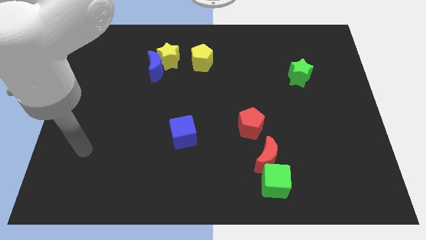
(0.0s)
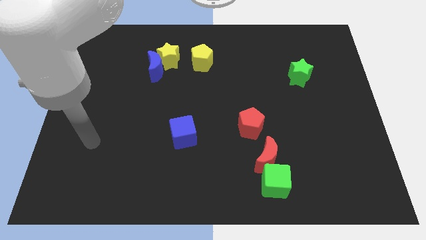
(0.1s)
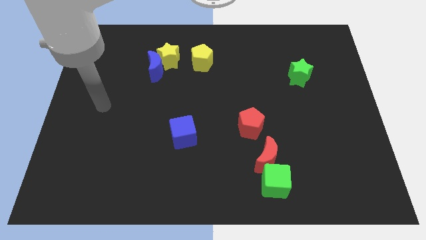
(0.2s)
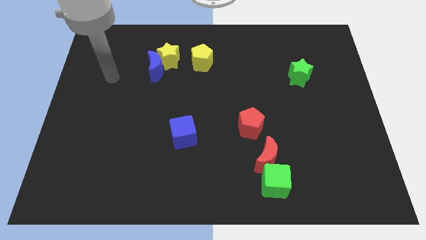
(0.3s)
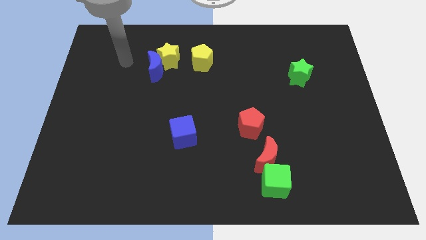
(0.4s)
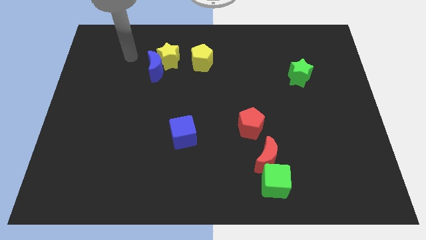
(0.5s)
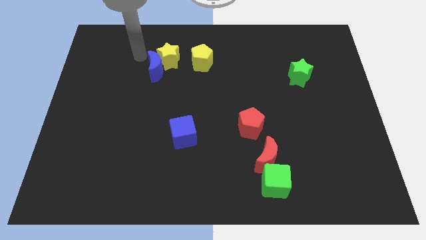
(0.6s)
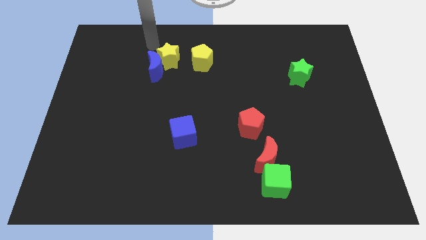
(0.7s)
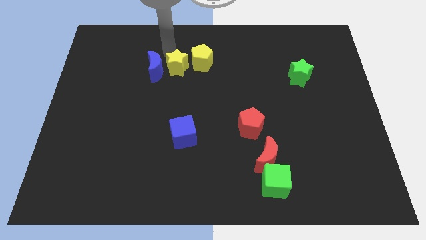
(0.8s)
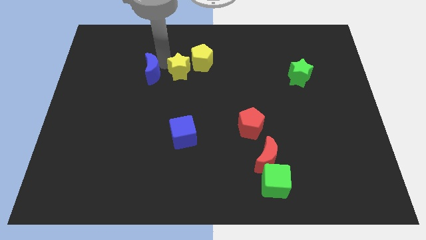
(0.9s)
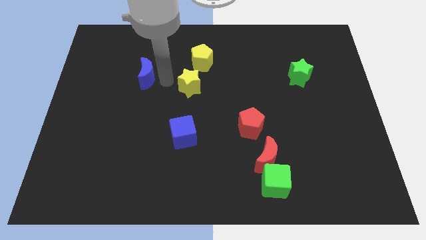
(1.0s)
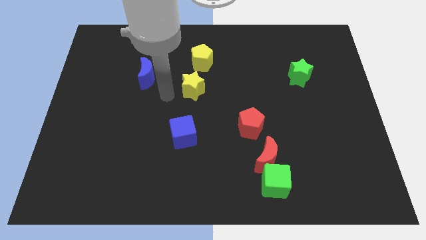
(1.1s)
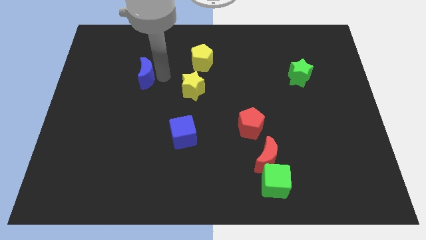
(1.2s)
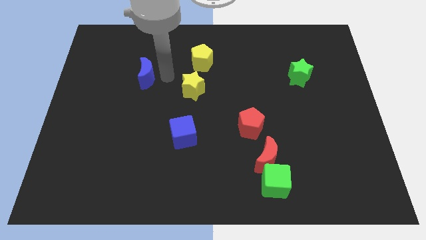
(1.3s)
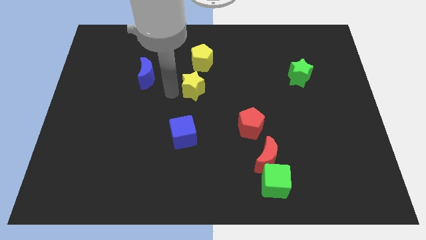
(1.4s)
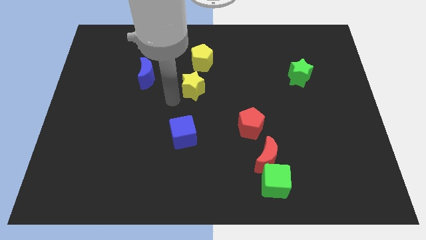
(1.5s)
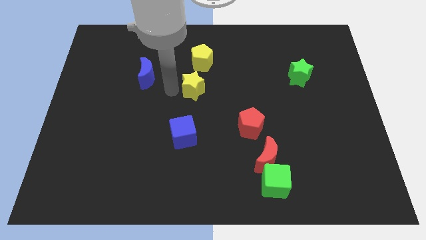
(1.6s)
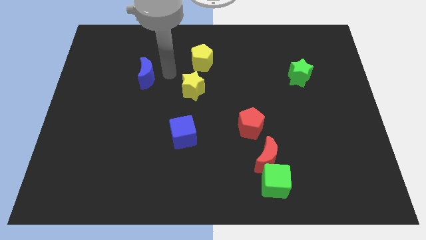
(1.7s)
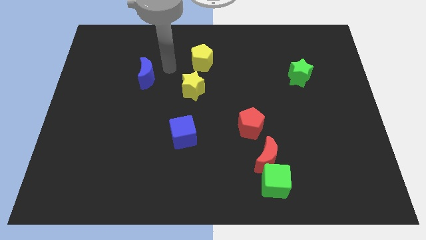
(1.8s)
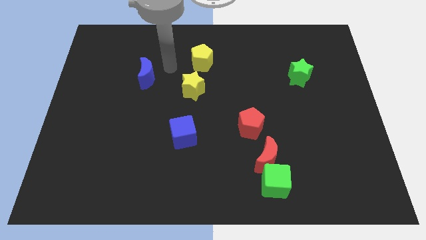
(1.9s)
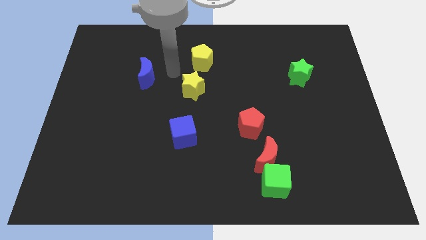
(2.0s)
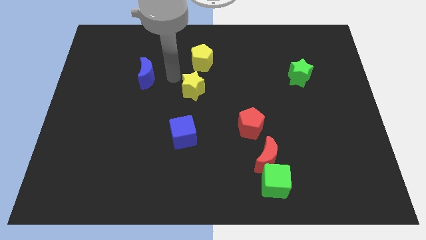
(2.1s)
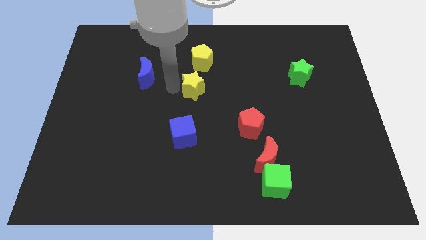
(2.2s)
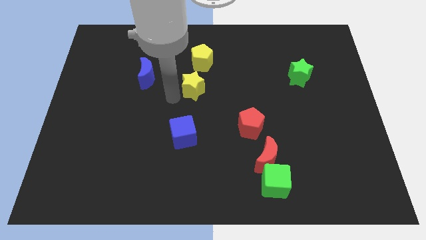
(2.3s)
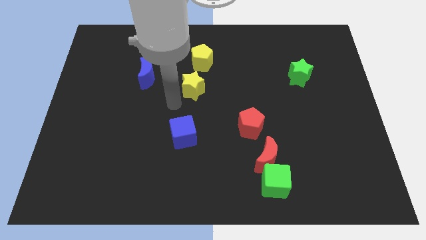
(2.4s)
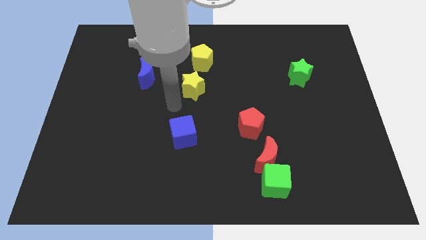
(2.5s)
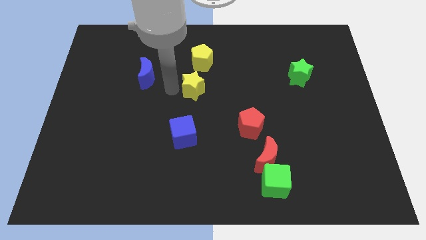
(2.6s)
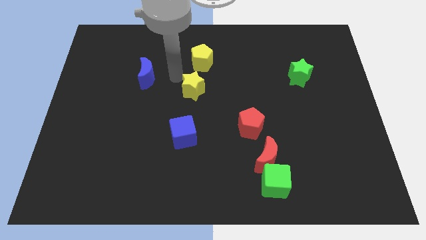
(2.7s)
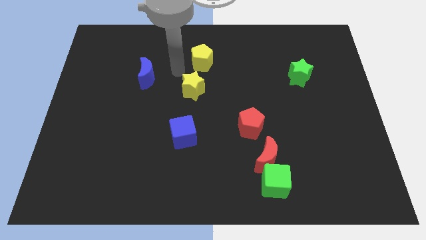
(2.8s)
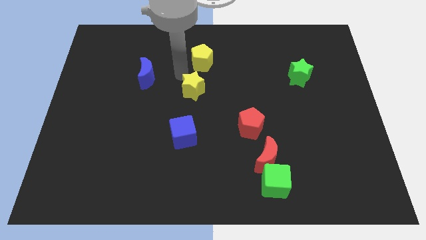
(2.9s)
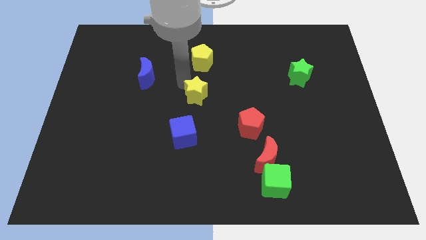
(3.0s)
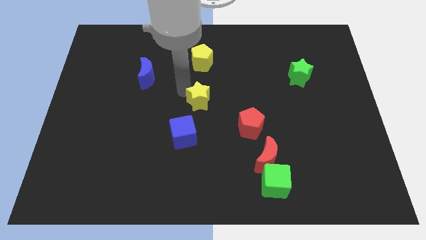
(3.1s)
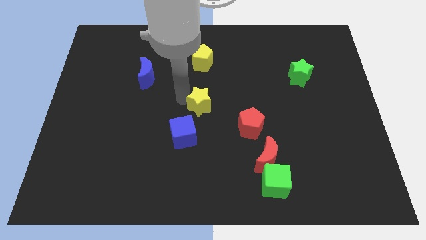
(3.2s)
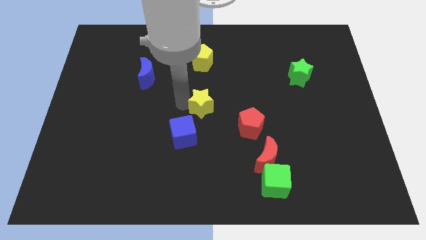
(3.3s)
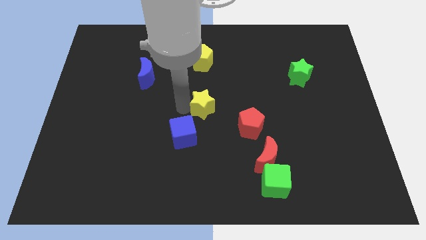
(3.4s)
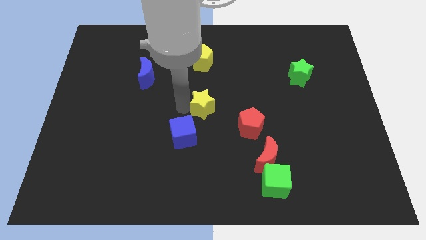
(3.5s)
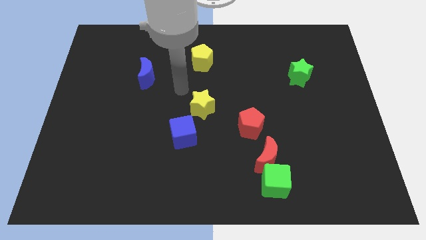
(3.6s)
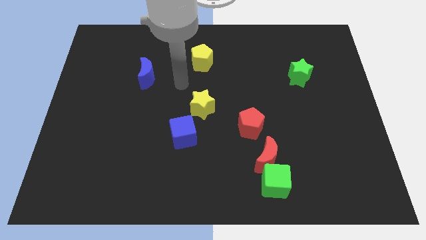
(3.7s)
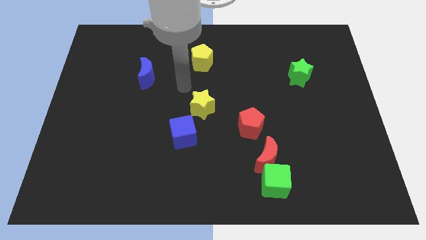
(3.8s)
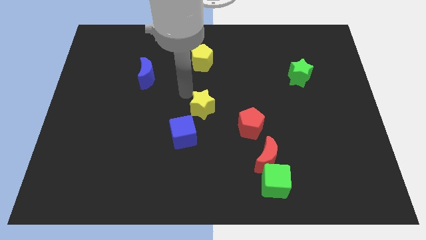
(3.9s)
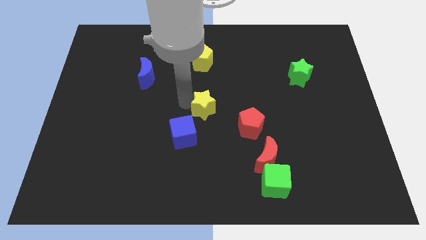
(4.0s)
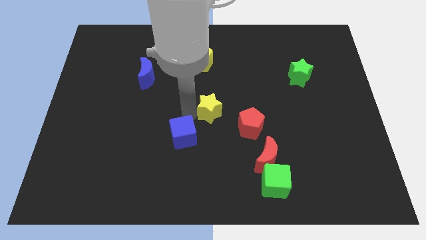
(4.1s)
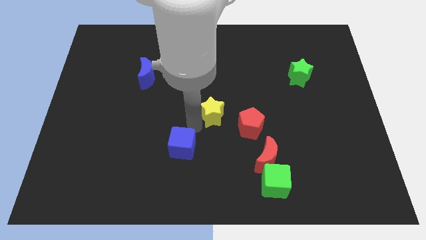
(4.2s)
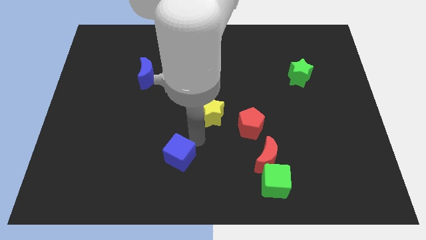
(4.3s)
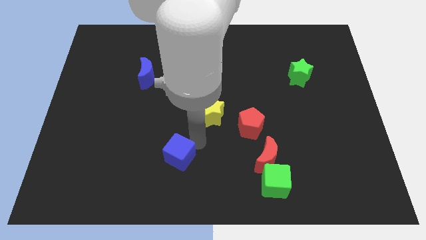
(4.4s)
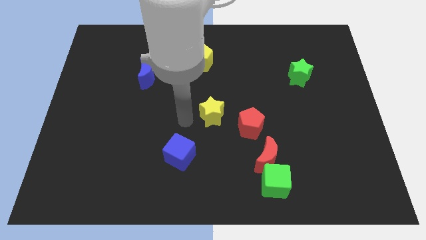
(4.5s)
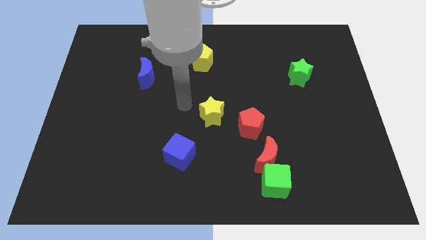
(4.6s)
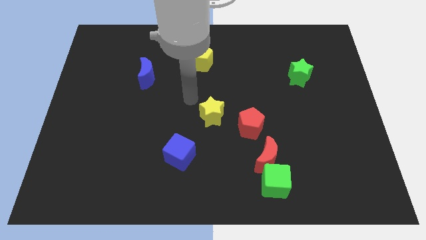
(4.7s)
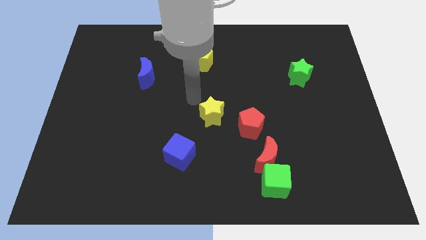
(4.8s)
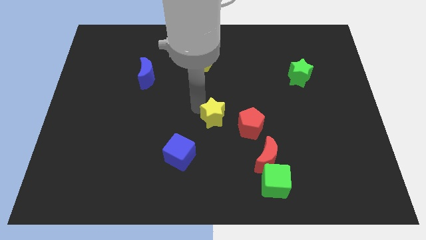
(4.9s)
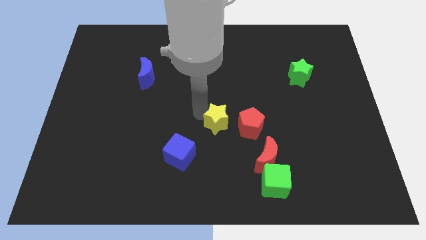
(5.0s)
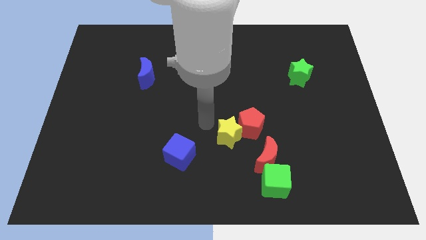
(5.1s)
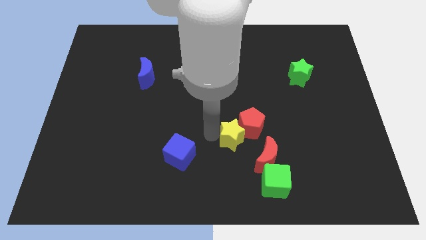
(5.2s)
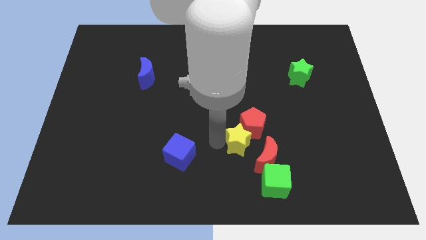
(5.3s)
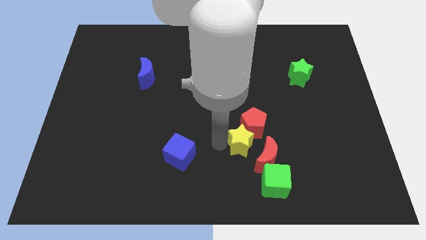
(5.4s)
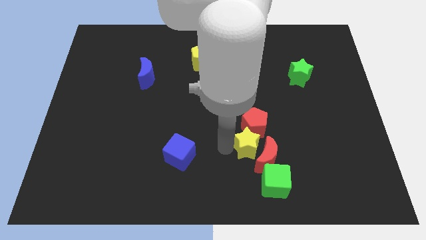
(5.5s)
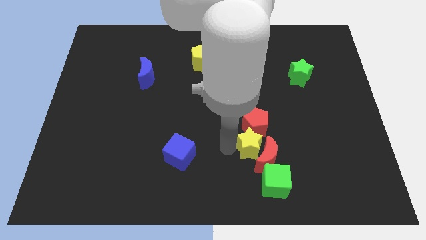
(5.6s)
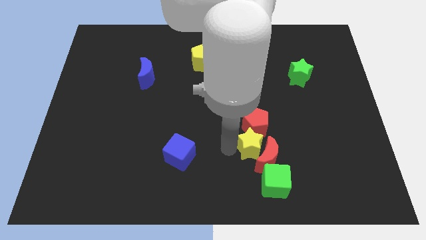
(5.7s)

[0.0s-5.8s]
move the yellow star towards the red moon

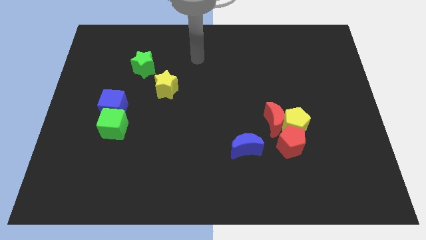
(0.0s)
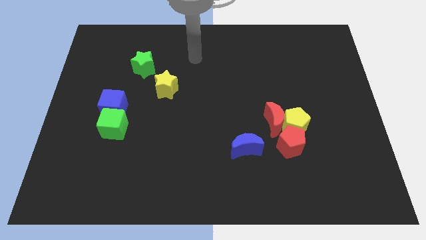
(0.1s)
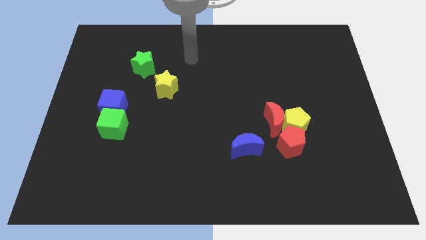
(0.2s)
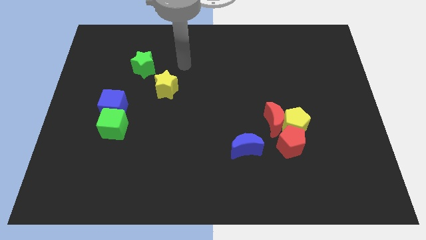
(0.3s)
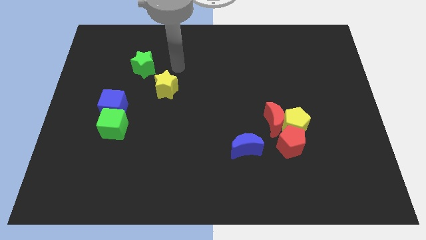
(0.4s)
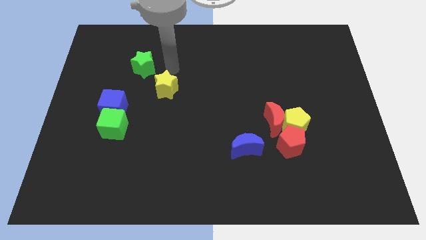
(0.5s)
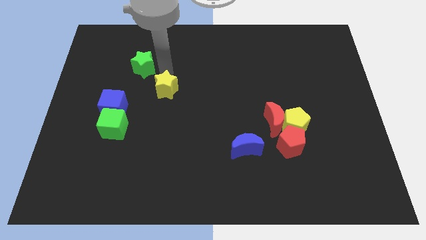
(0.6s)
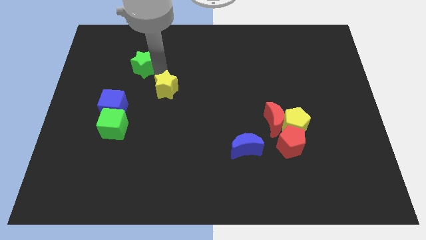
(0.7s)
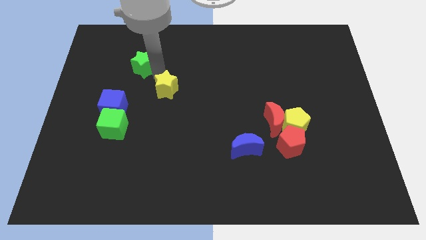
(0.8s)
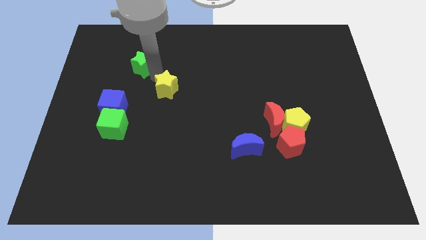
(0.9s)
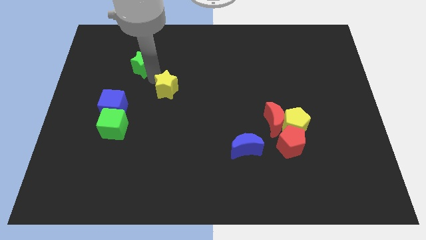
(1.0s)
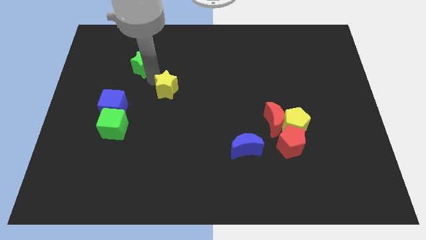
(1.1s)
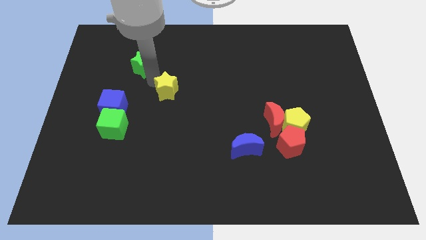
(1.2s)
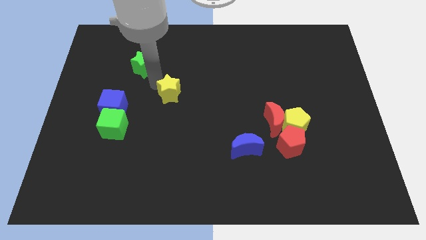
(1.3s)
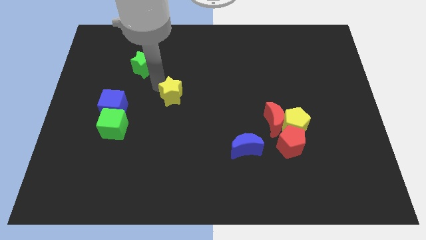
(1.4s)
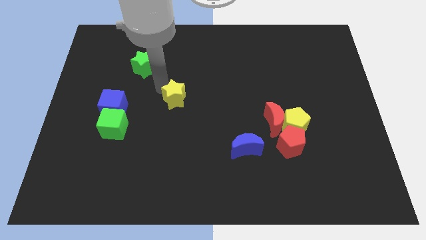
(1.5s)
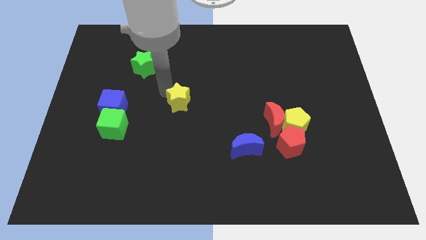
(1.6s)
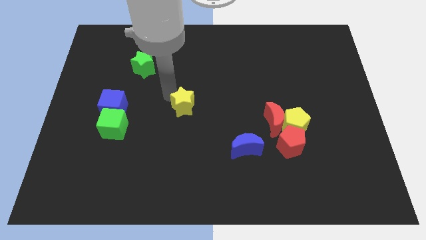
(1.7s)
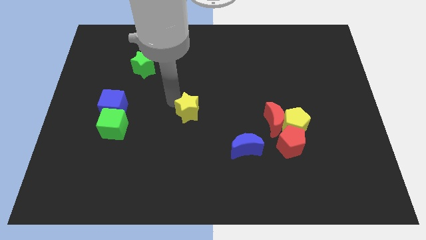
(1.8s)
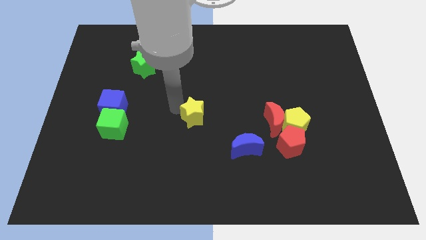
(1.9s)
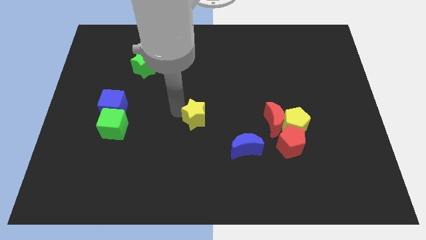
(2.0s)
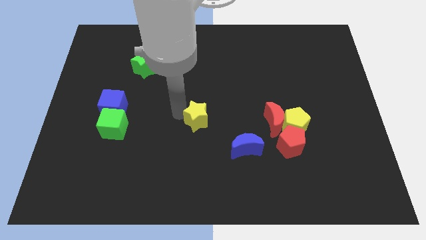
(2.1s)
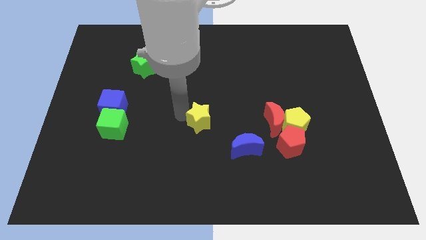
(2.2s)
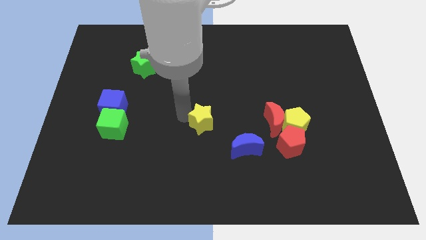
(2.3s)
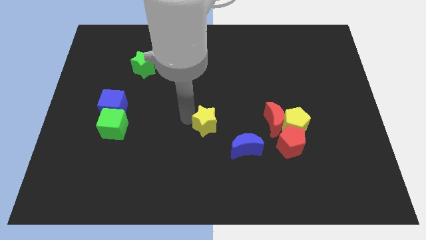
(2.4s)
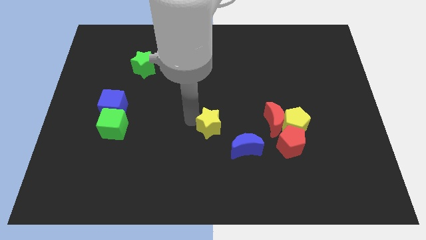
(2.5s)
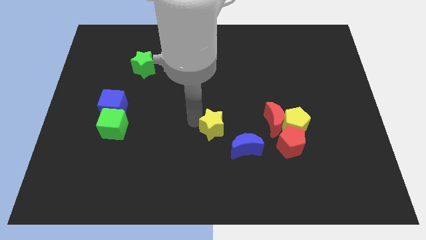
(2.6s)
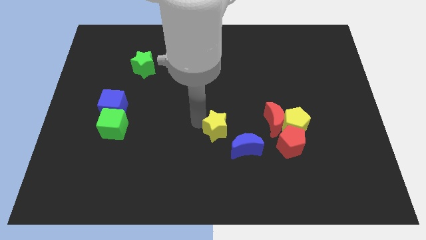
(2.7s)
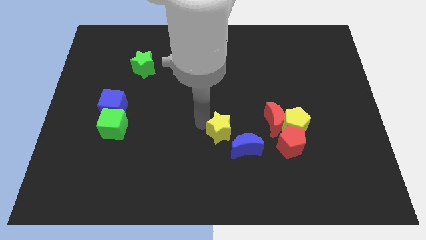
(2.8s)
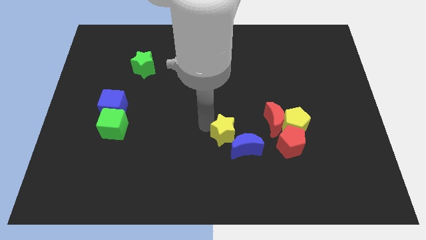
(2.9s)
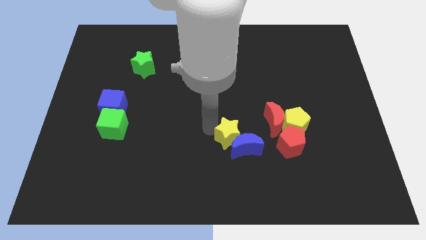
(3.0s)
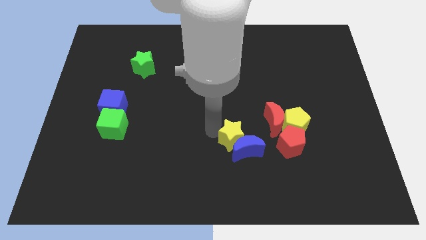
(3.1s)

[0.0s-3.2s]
put the yellow star to the blue moon
